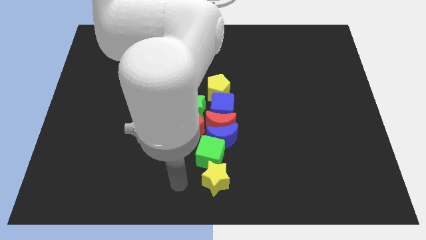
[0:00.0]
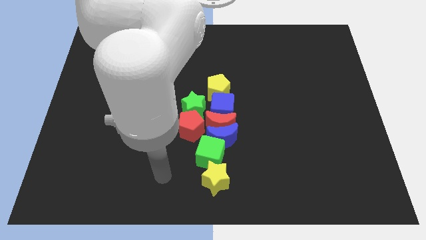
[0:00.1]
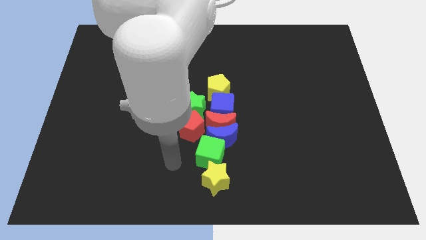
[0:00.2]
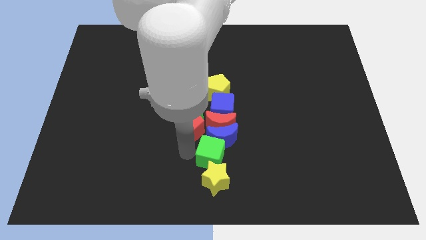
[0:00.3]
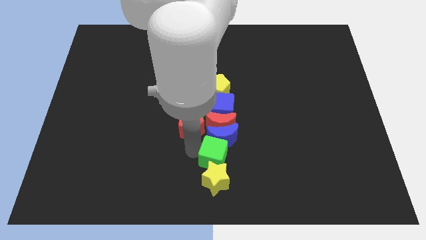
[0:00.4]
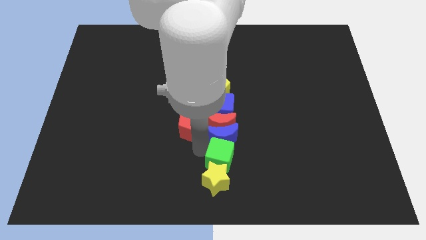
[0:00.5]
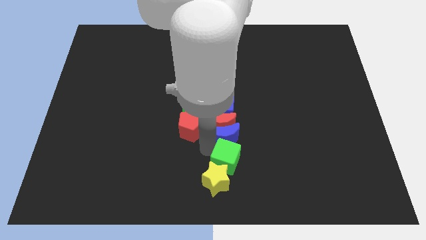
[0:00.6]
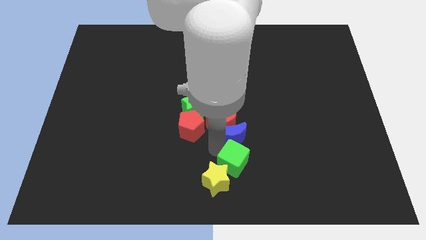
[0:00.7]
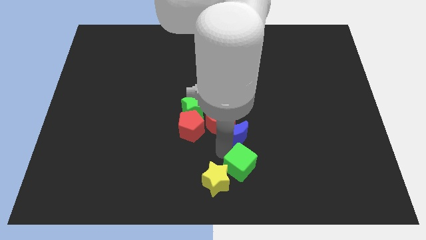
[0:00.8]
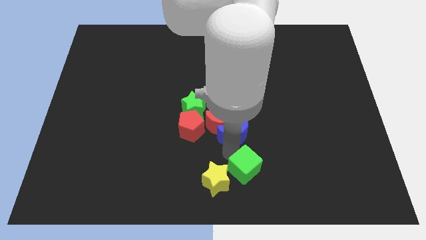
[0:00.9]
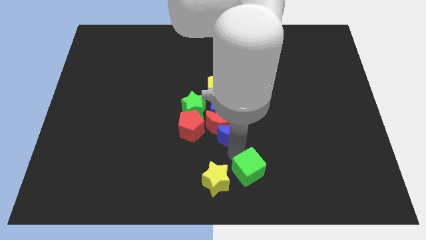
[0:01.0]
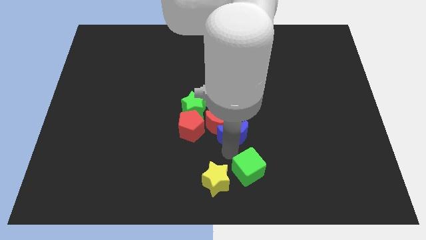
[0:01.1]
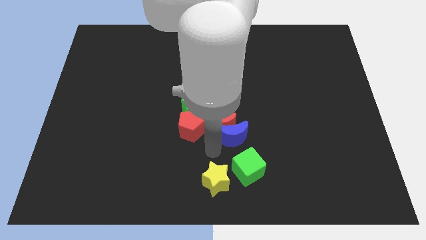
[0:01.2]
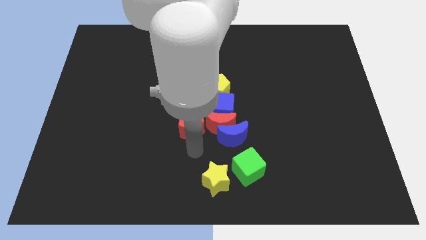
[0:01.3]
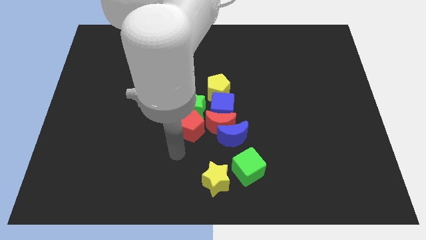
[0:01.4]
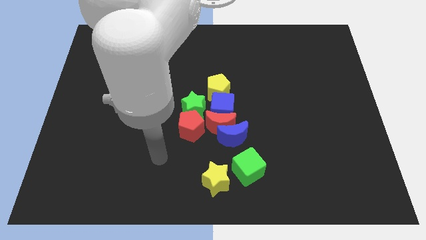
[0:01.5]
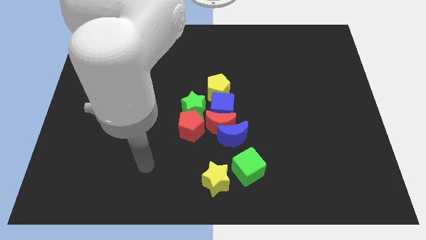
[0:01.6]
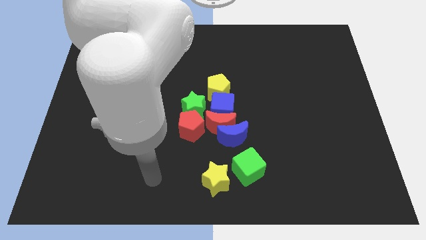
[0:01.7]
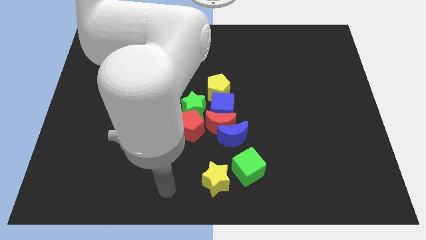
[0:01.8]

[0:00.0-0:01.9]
push the green cube towards the right side of the yellow star

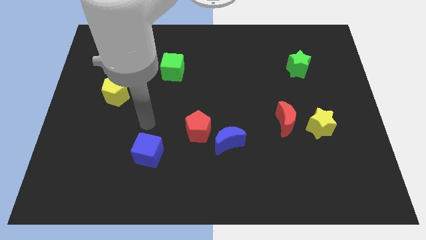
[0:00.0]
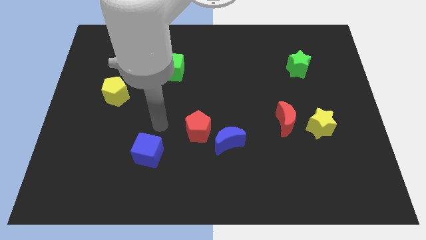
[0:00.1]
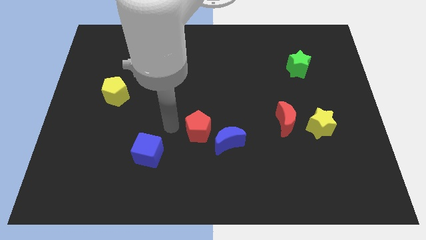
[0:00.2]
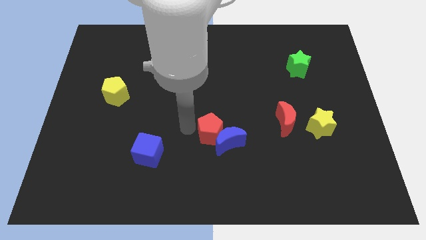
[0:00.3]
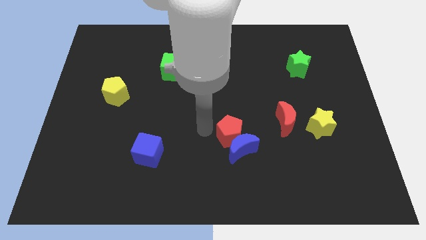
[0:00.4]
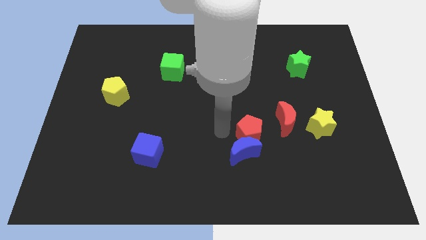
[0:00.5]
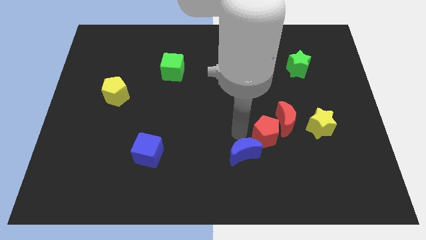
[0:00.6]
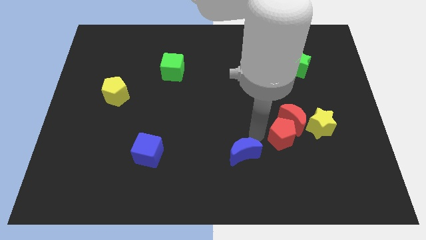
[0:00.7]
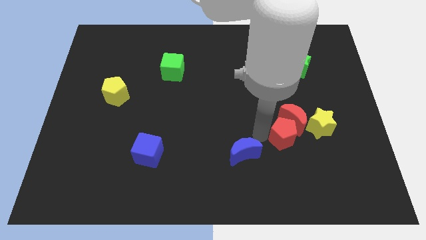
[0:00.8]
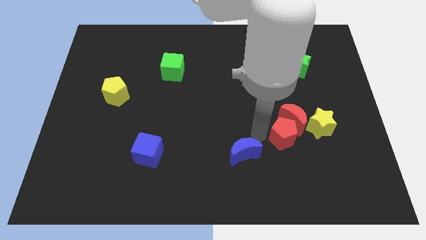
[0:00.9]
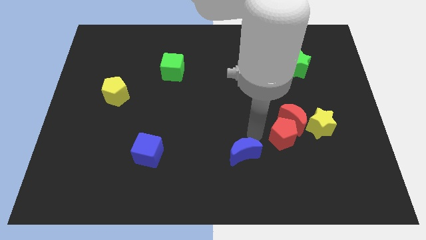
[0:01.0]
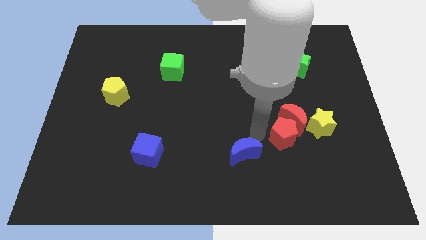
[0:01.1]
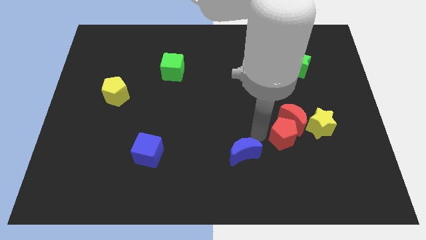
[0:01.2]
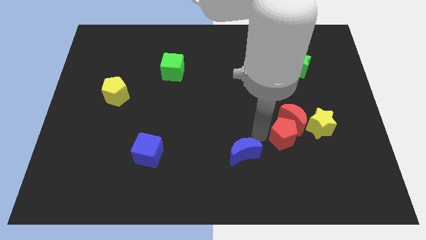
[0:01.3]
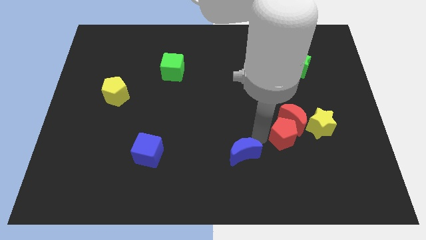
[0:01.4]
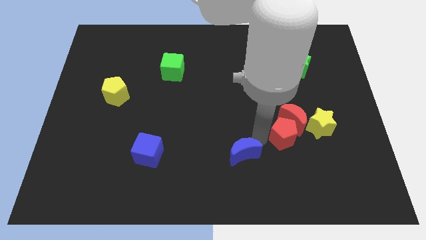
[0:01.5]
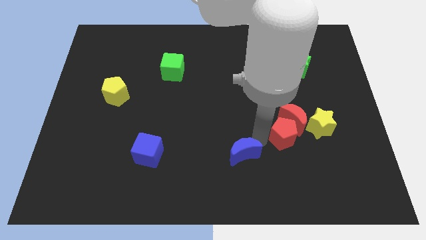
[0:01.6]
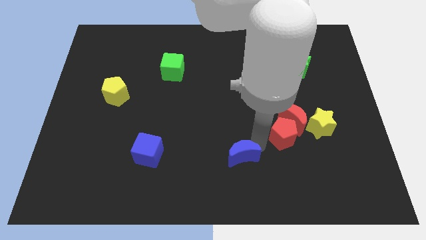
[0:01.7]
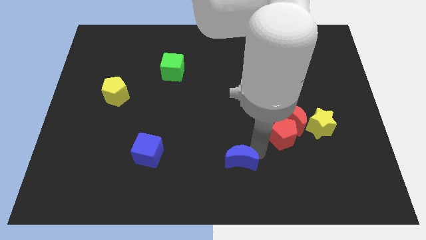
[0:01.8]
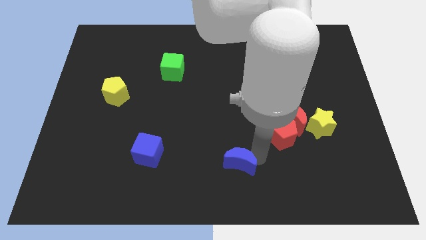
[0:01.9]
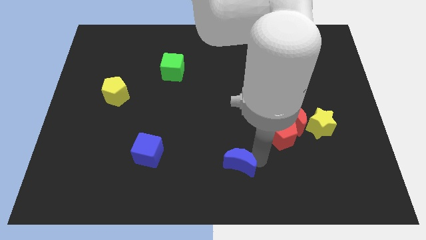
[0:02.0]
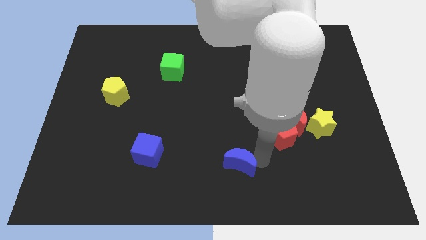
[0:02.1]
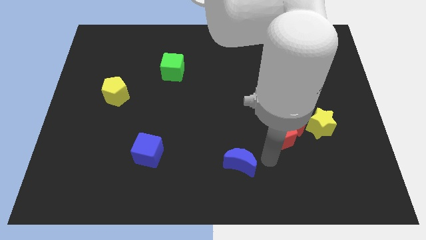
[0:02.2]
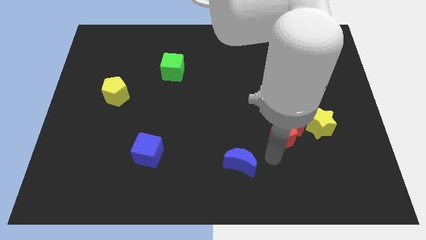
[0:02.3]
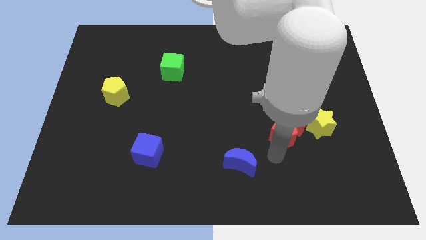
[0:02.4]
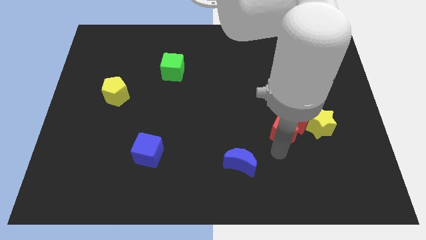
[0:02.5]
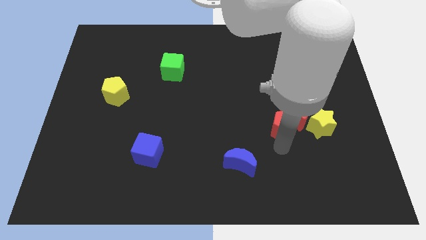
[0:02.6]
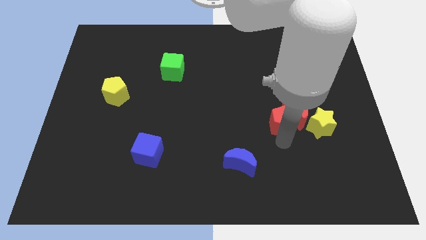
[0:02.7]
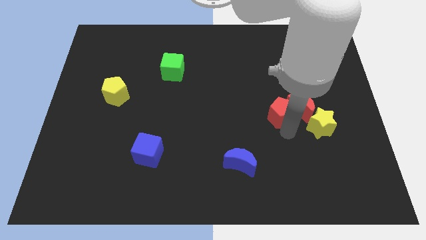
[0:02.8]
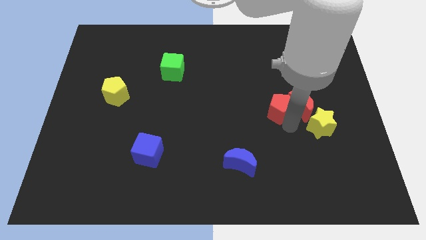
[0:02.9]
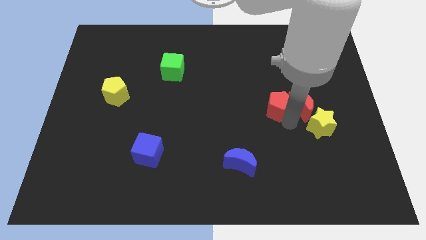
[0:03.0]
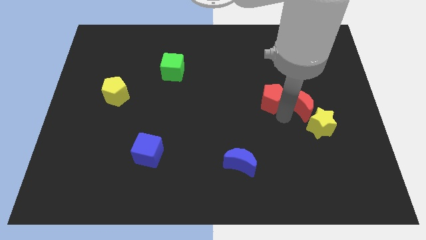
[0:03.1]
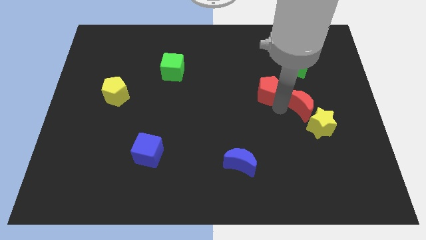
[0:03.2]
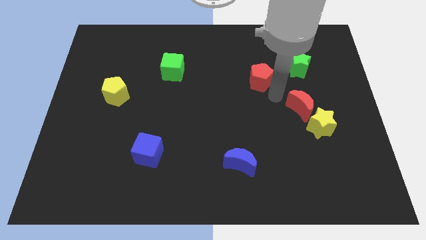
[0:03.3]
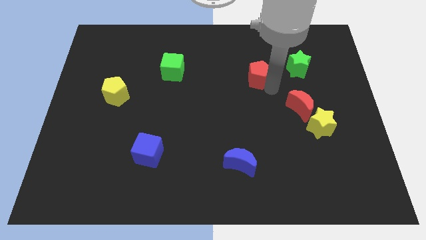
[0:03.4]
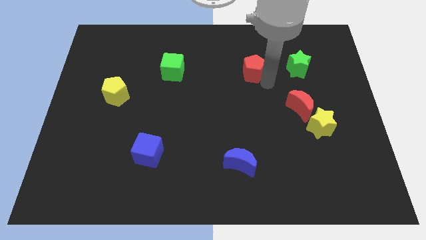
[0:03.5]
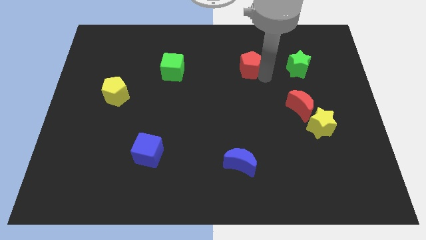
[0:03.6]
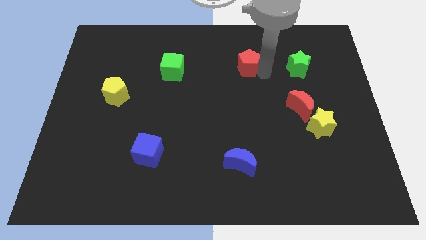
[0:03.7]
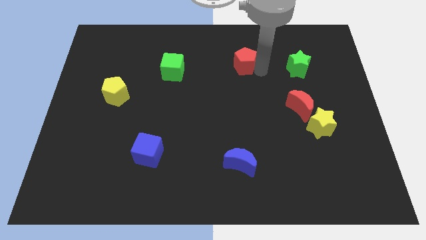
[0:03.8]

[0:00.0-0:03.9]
place the red pentagon to the right of the green cube

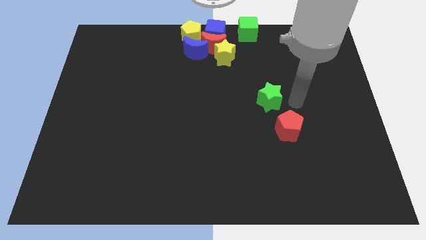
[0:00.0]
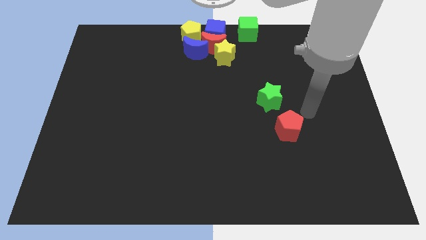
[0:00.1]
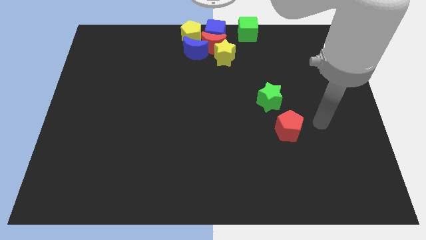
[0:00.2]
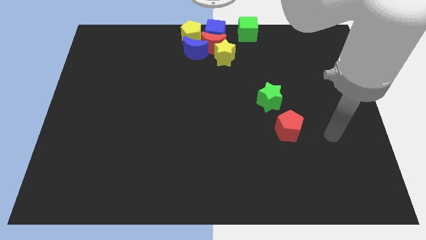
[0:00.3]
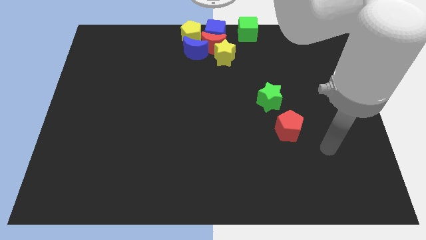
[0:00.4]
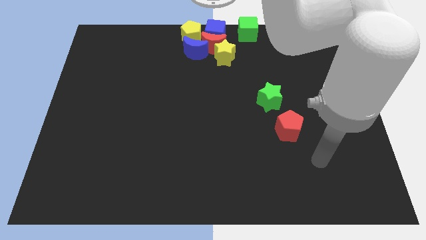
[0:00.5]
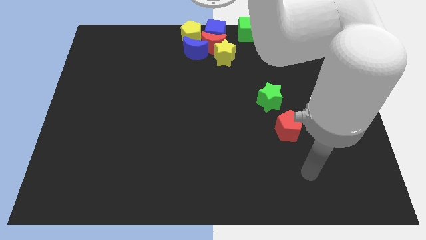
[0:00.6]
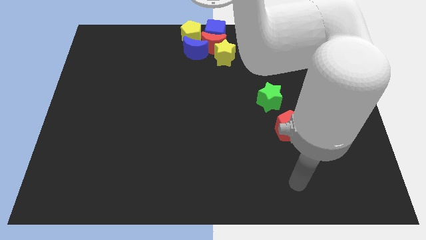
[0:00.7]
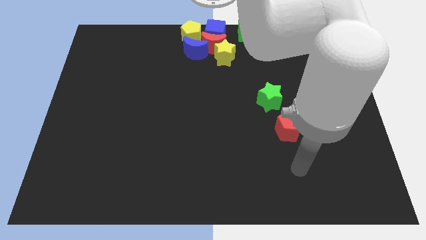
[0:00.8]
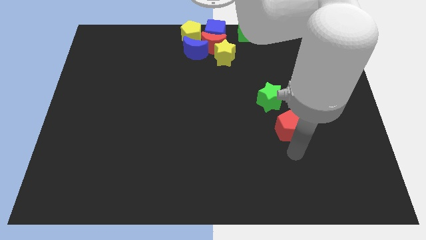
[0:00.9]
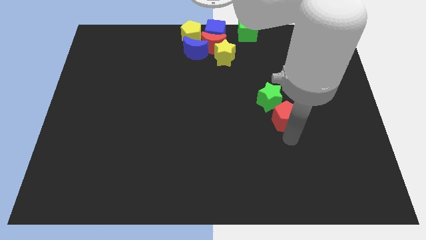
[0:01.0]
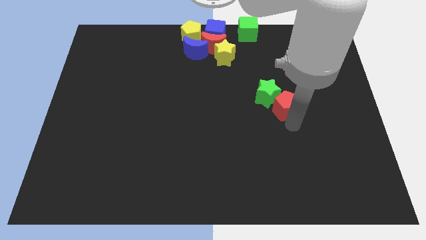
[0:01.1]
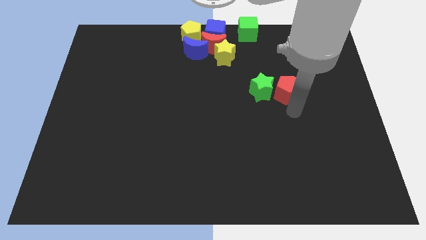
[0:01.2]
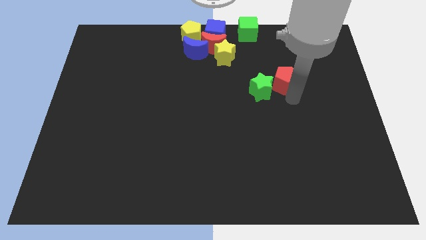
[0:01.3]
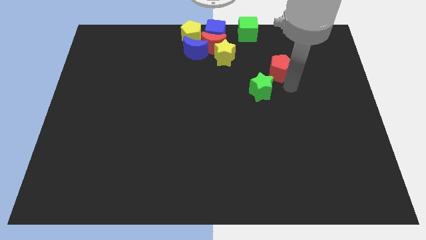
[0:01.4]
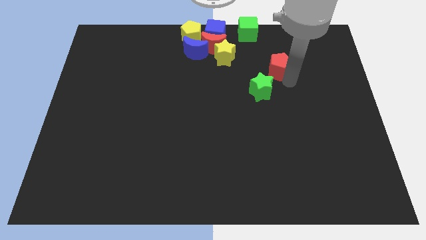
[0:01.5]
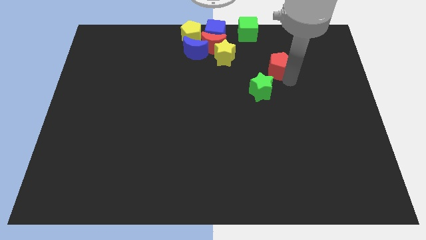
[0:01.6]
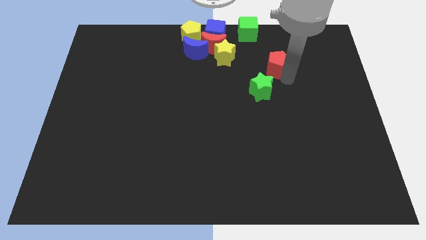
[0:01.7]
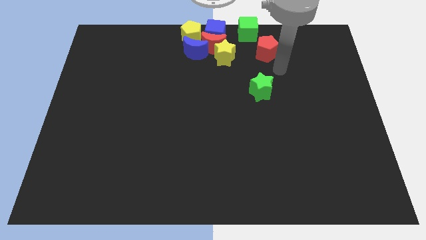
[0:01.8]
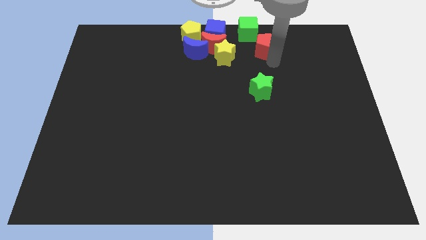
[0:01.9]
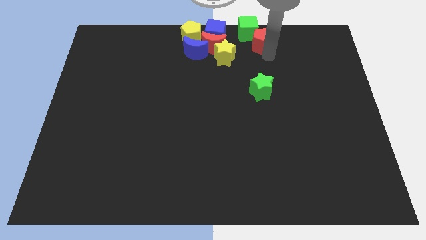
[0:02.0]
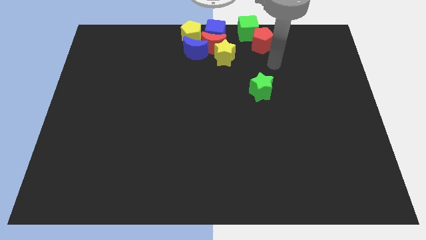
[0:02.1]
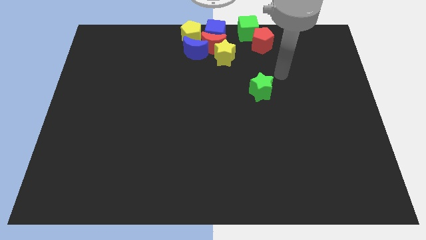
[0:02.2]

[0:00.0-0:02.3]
push the red pentagon to the bottom right of the green cube

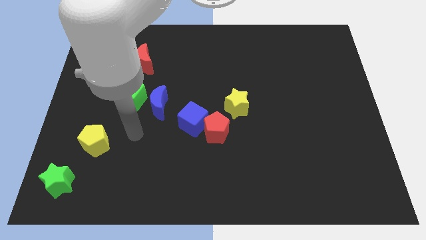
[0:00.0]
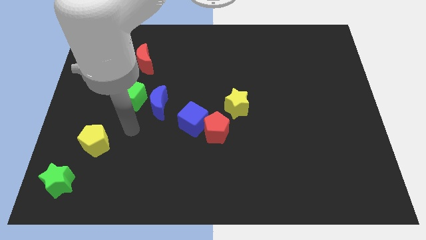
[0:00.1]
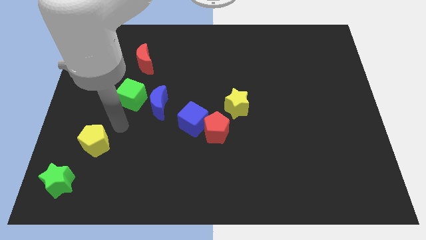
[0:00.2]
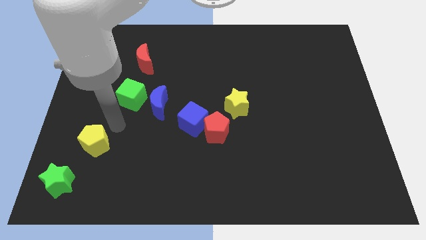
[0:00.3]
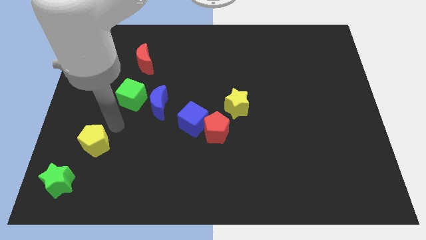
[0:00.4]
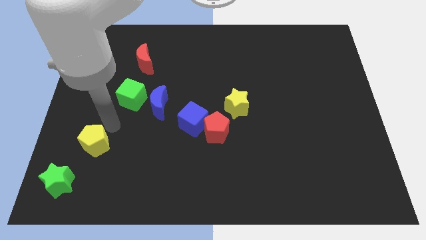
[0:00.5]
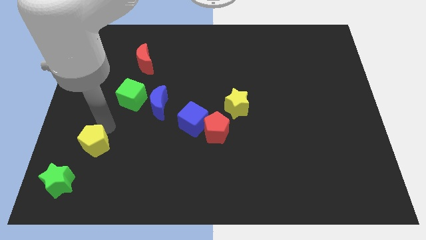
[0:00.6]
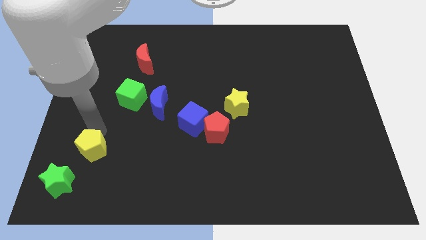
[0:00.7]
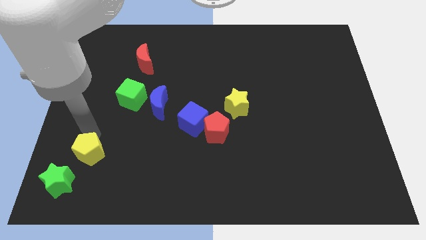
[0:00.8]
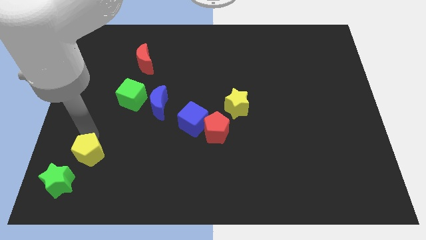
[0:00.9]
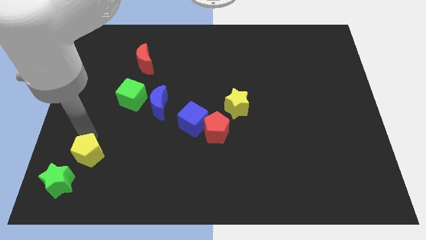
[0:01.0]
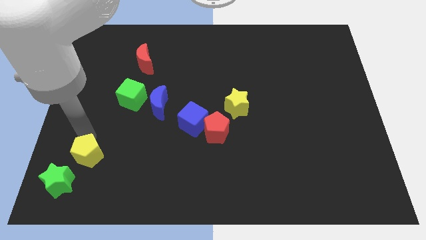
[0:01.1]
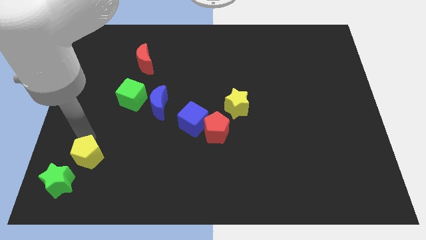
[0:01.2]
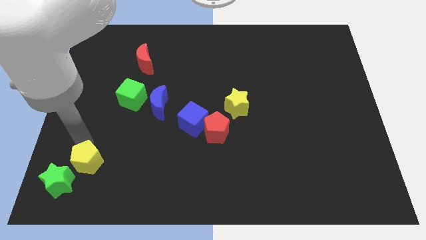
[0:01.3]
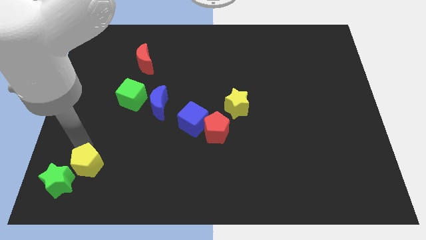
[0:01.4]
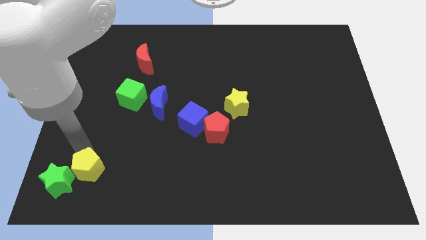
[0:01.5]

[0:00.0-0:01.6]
push the yellow pentagon close to the green star
